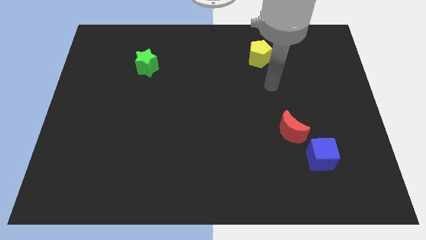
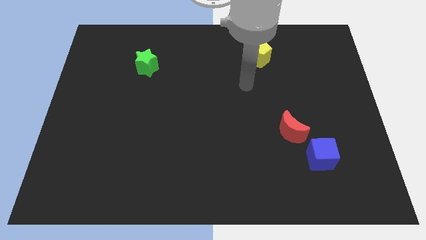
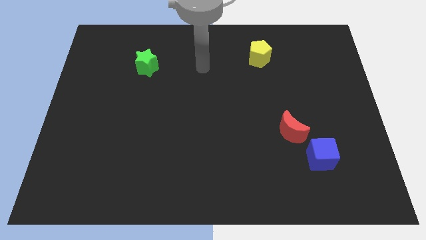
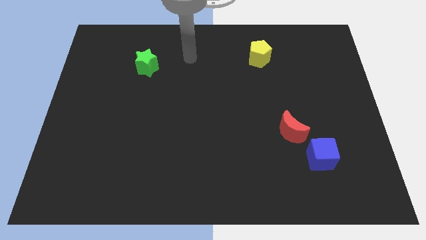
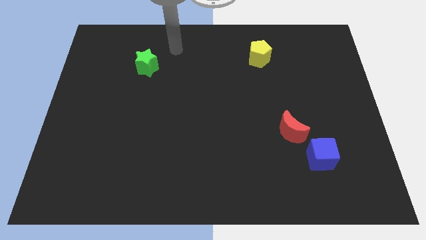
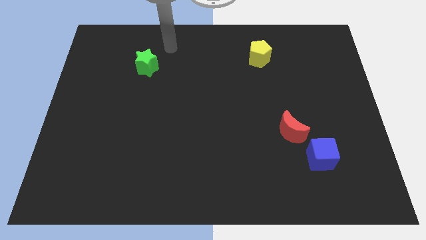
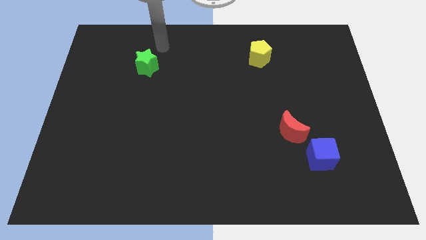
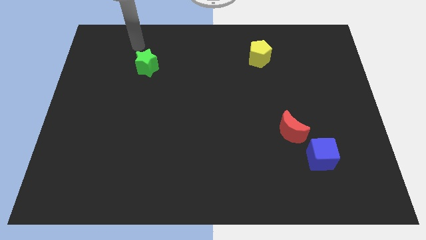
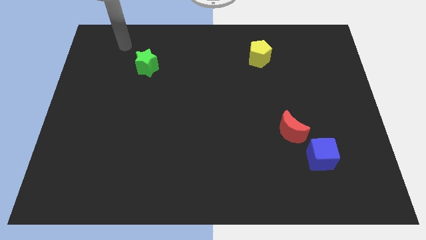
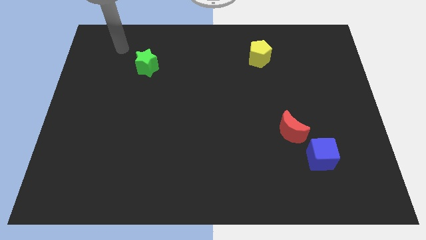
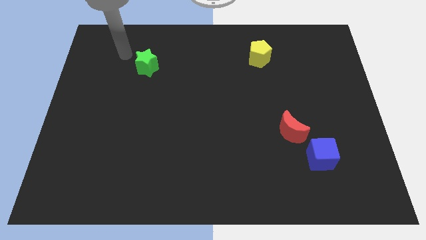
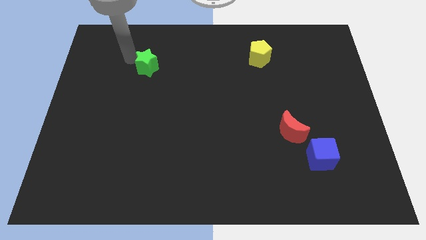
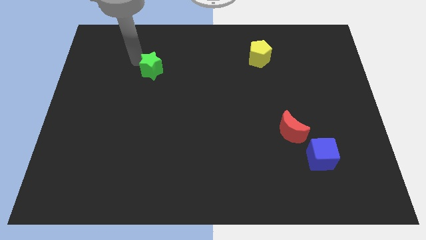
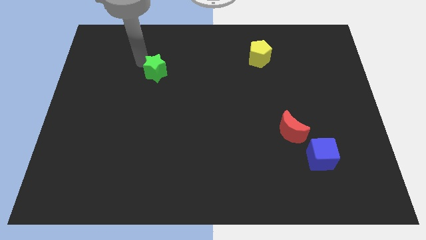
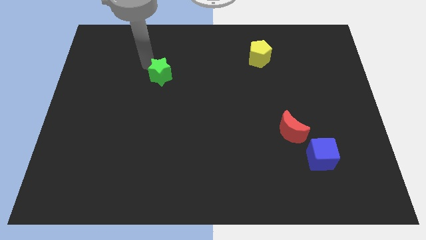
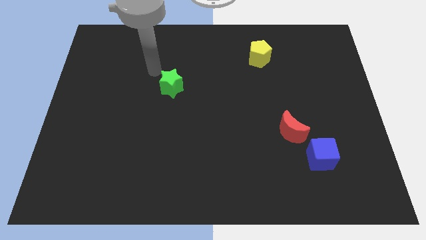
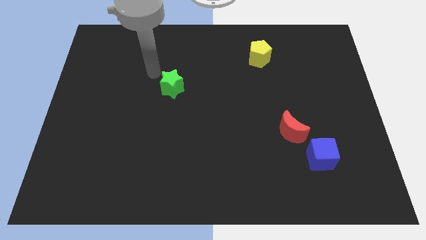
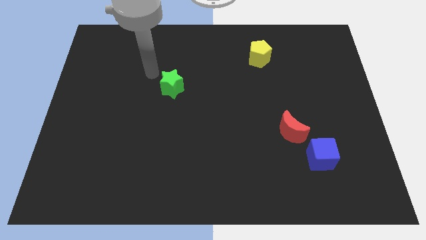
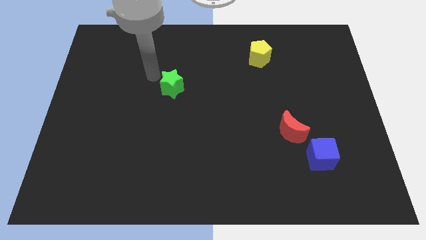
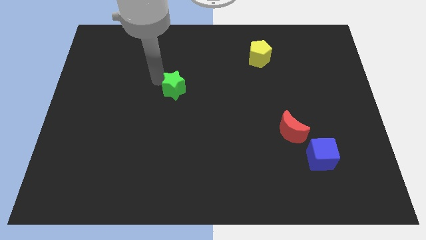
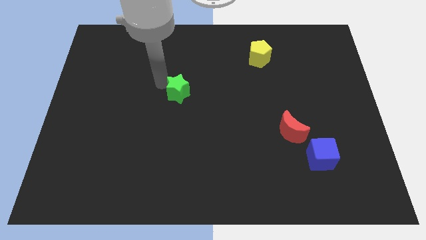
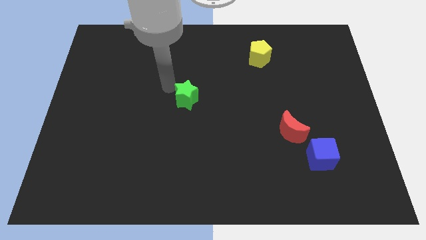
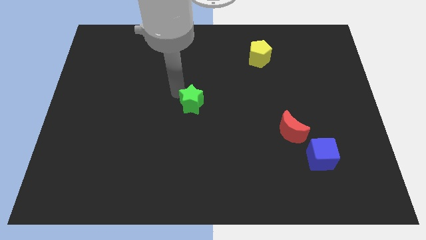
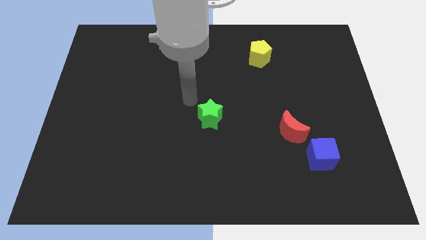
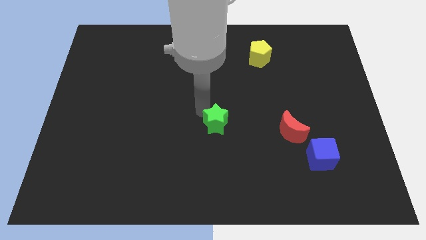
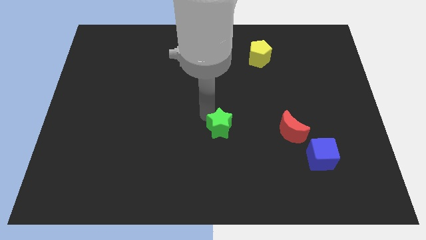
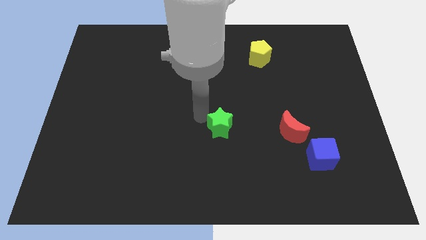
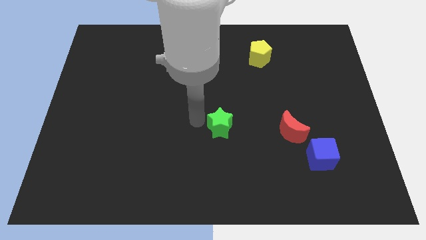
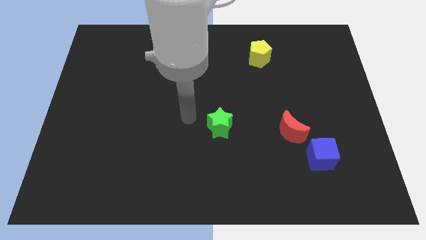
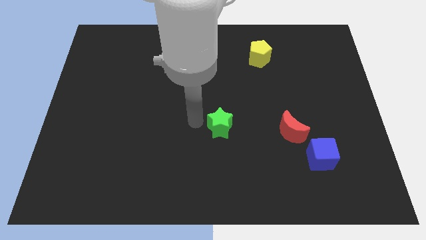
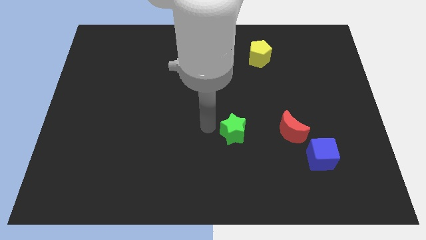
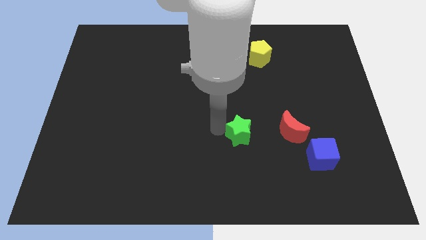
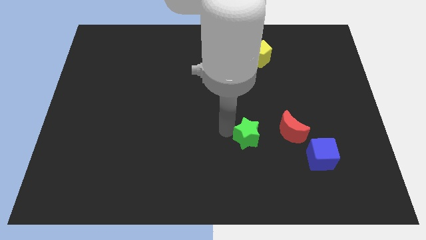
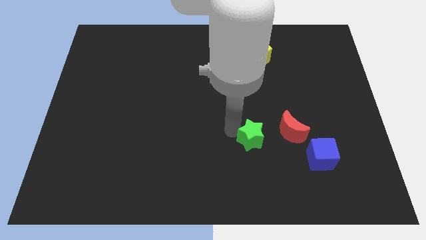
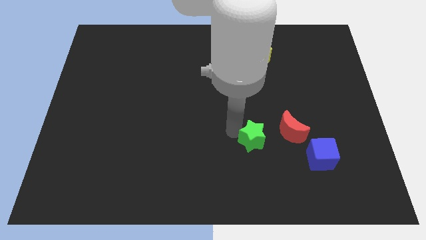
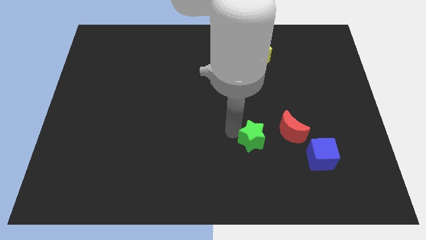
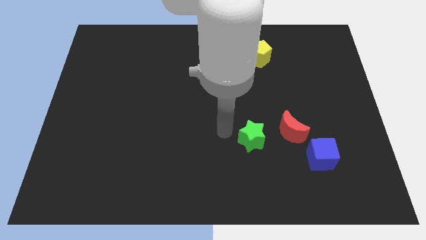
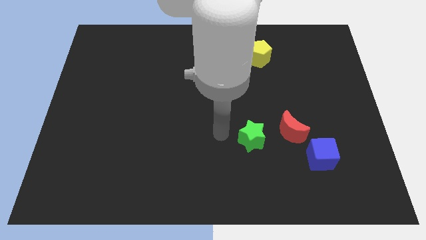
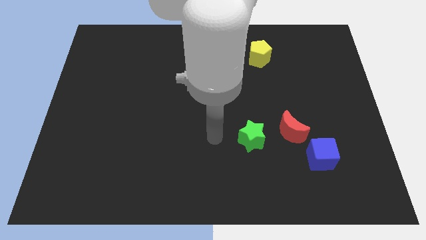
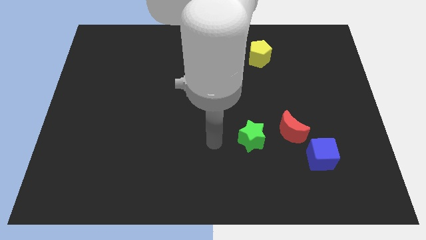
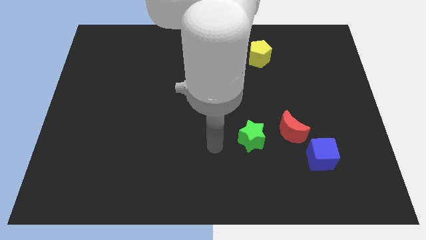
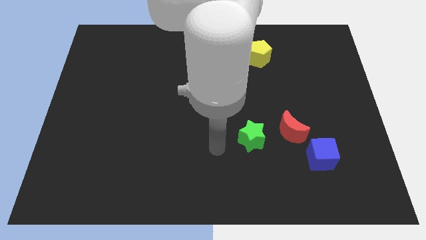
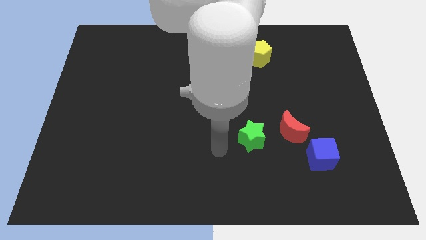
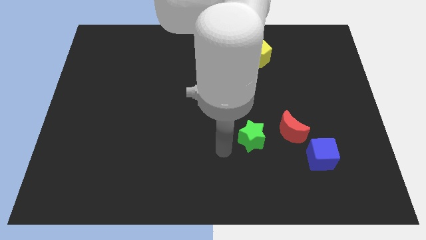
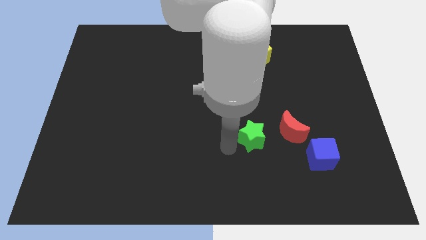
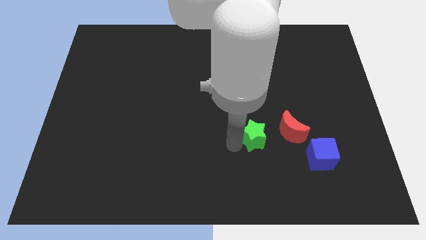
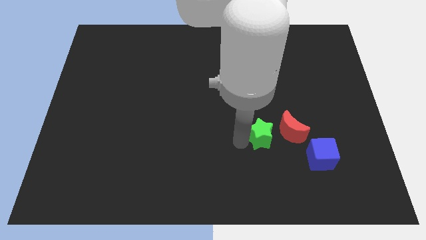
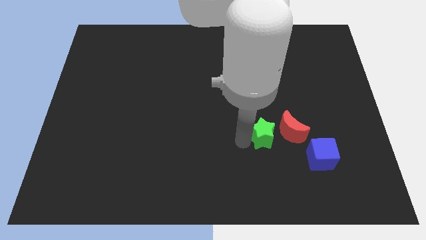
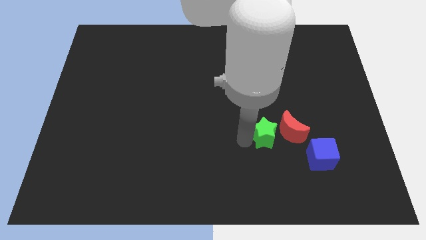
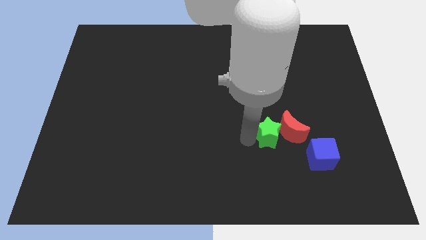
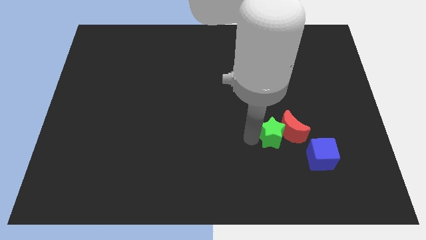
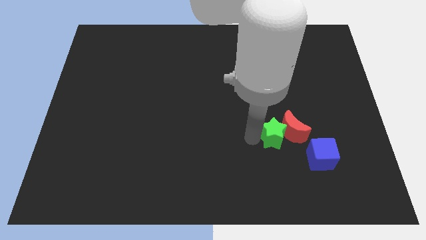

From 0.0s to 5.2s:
push the star next to the red moon

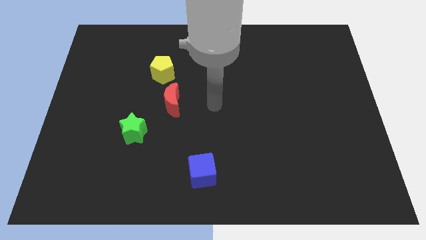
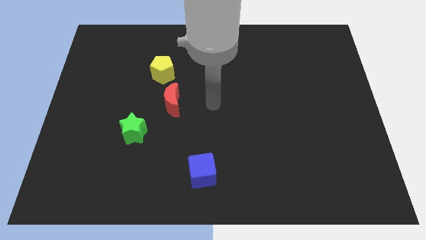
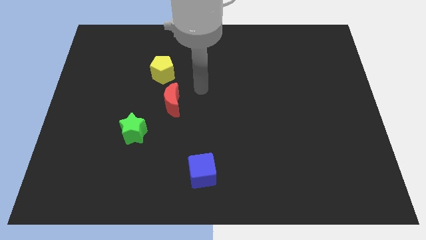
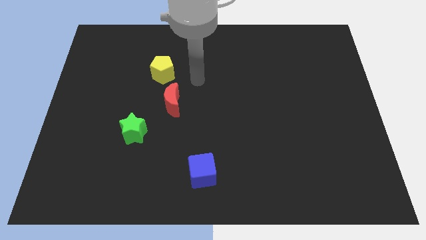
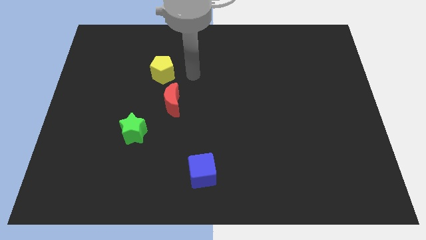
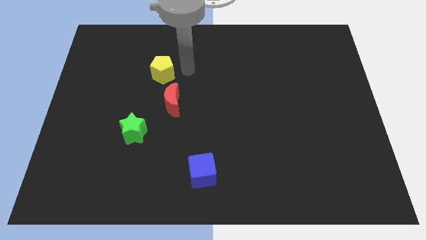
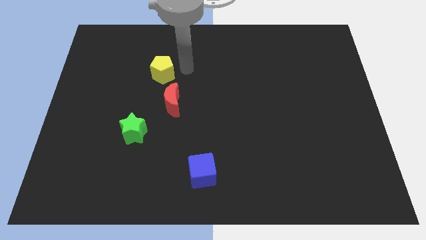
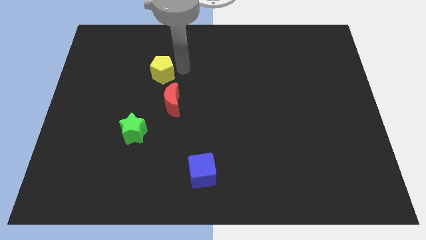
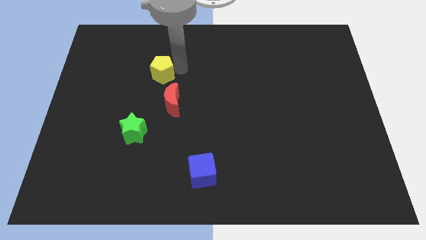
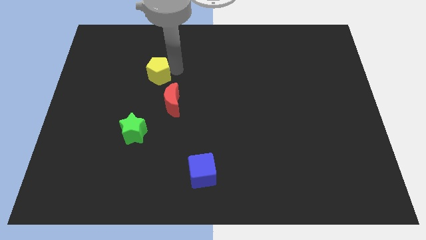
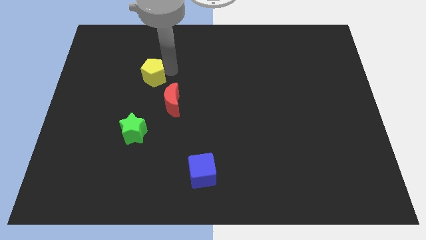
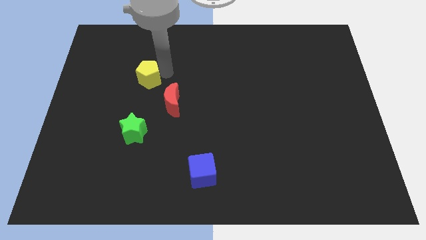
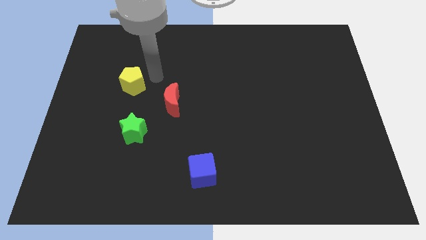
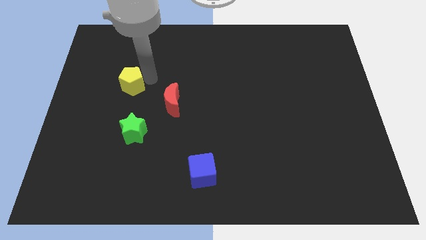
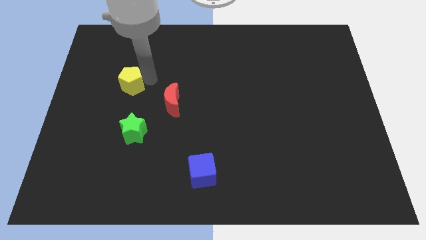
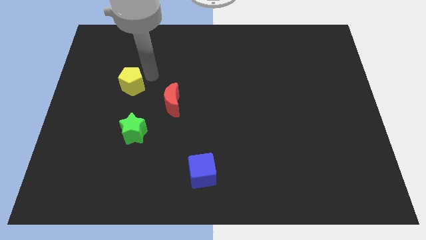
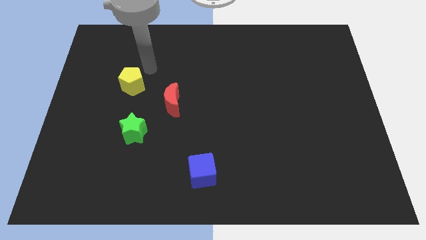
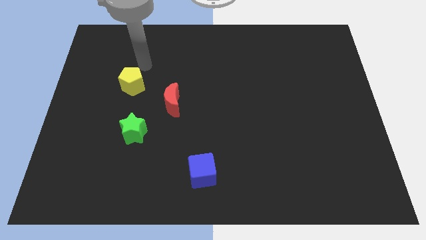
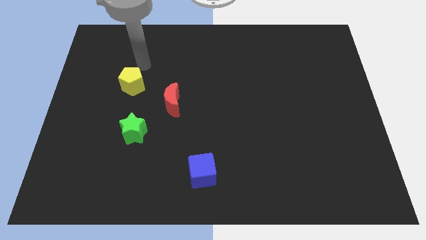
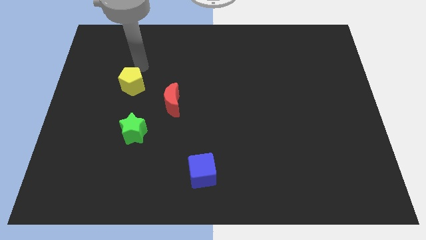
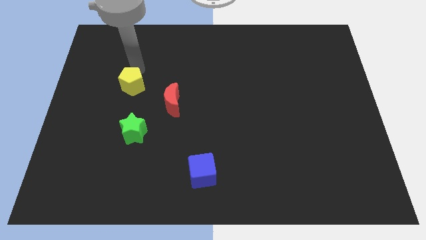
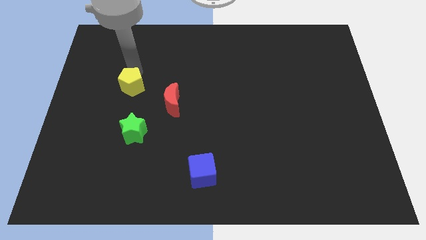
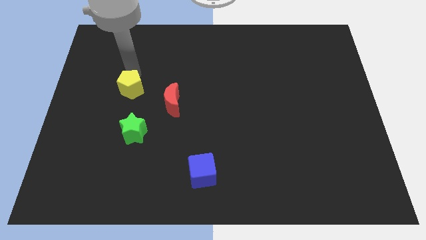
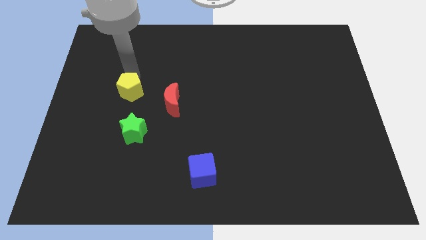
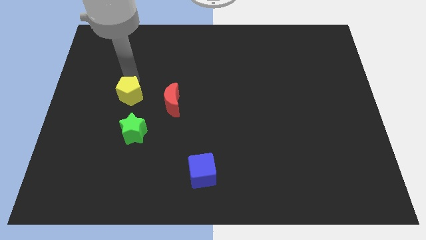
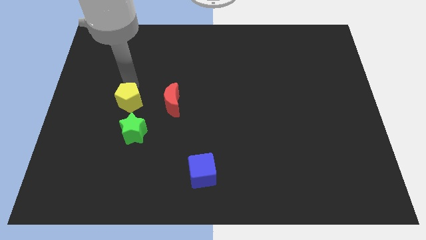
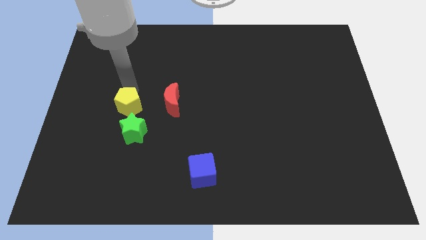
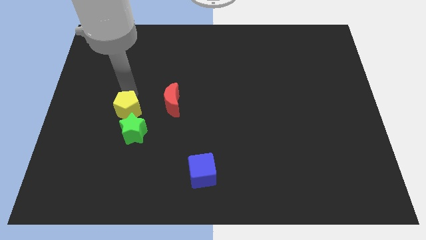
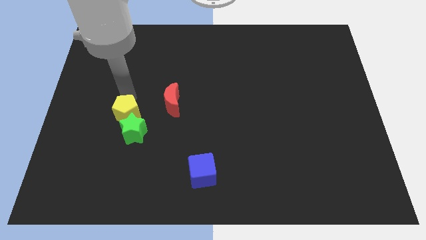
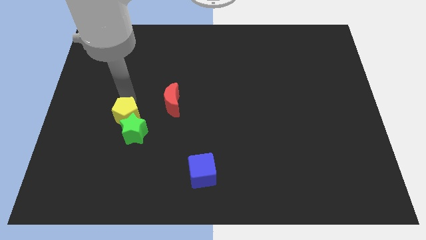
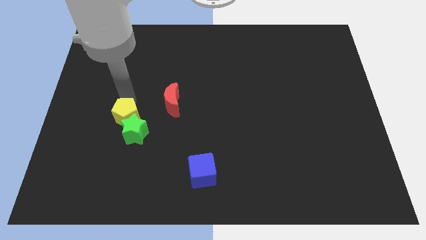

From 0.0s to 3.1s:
slide the yellow pentagon to the green star
